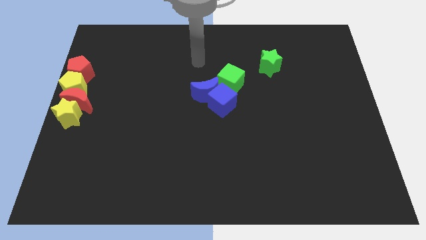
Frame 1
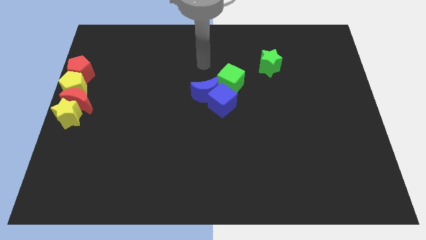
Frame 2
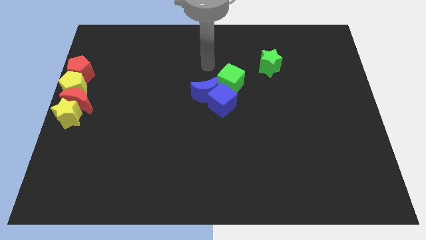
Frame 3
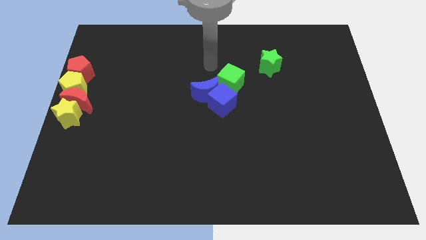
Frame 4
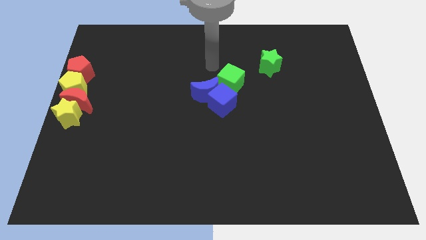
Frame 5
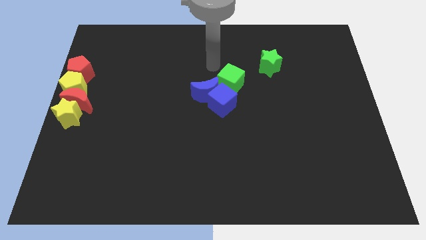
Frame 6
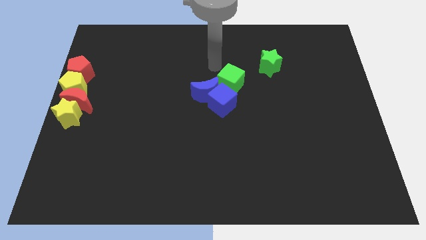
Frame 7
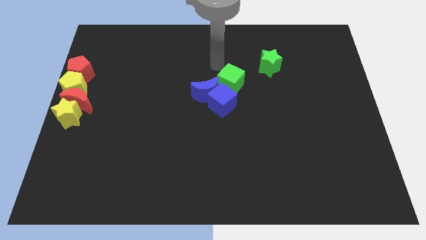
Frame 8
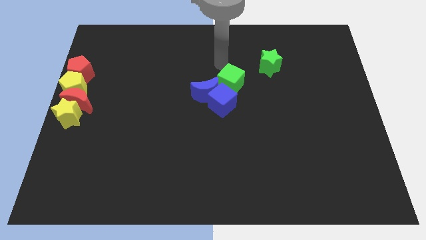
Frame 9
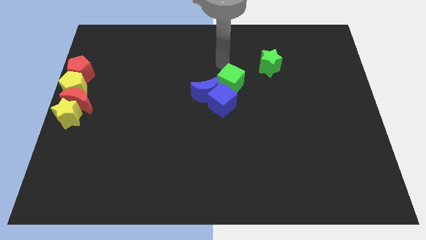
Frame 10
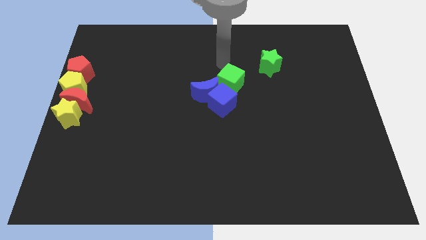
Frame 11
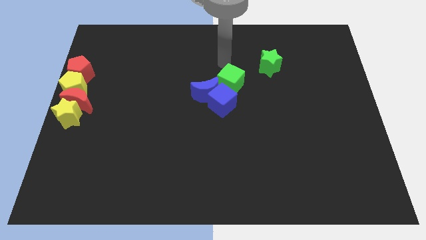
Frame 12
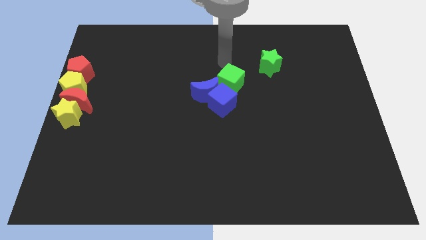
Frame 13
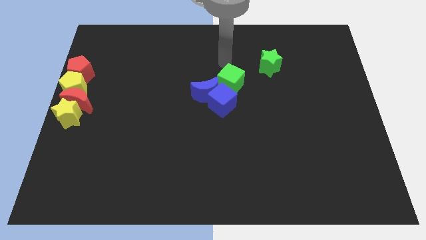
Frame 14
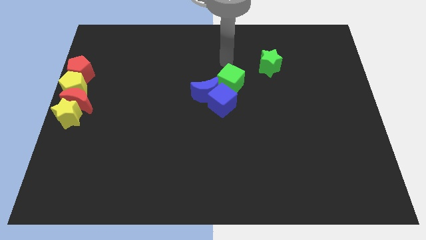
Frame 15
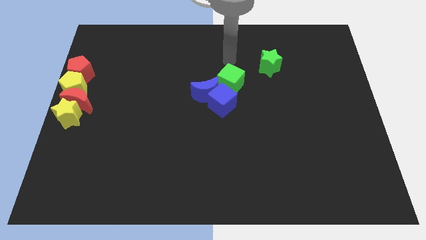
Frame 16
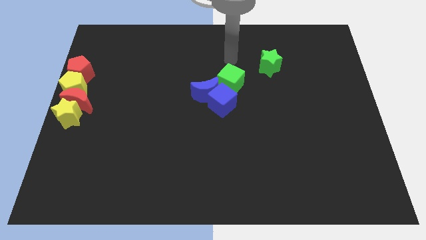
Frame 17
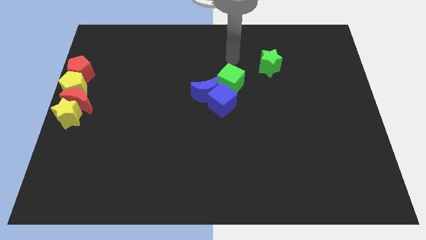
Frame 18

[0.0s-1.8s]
move your arm to the top of the green cube

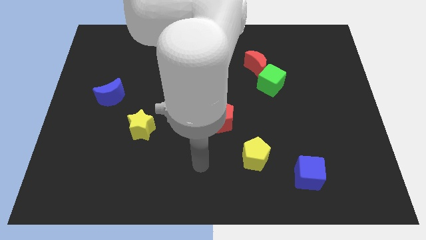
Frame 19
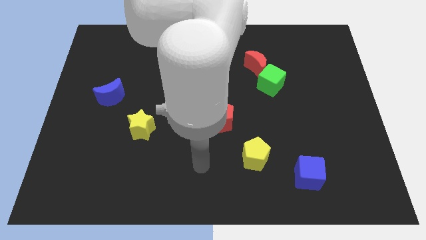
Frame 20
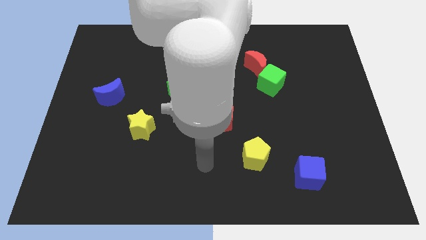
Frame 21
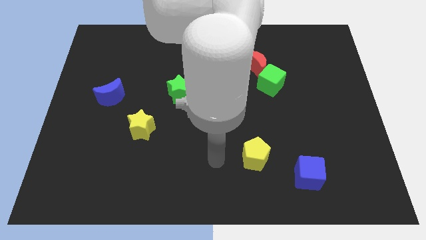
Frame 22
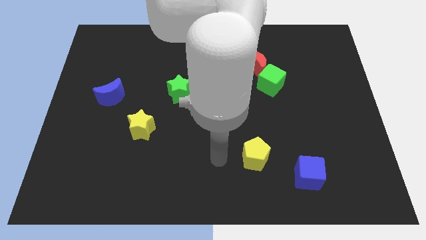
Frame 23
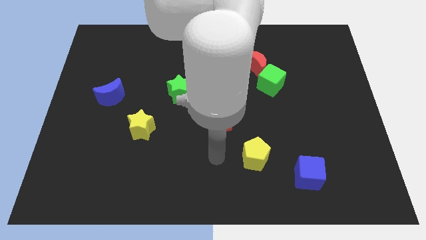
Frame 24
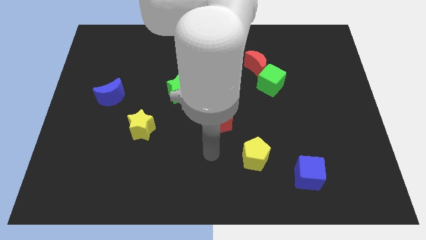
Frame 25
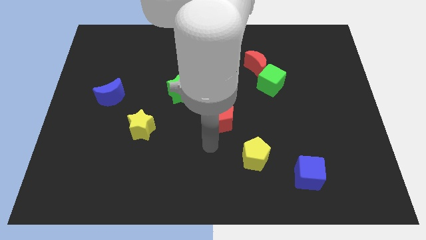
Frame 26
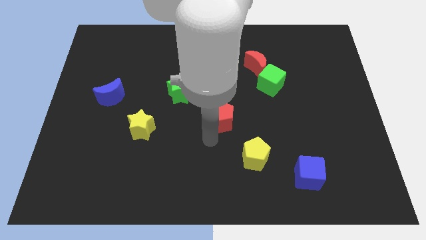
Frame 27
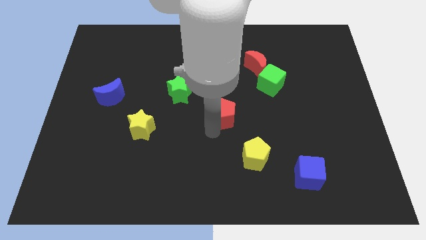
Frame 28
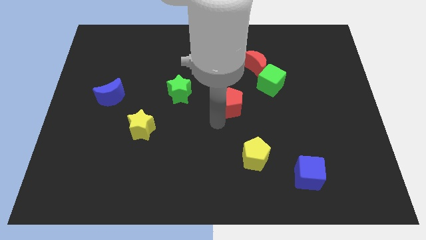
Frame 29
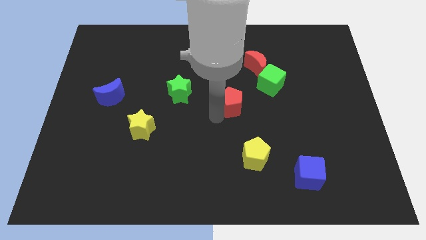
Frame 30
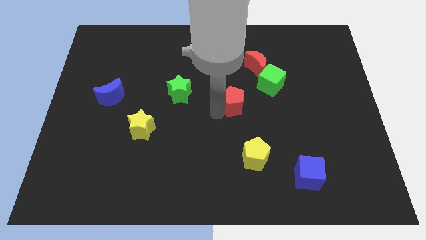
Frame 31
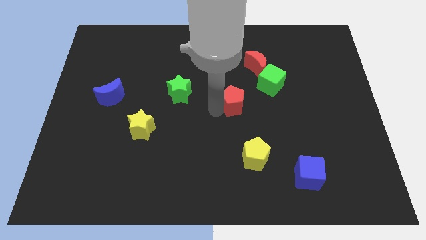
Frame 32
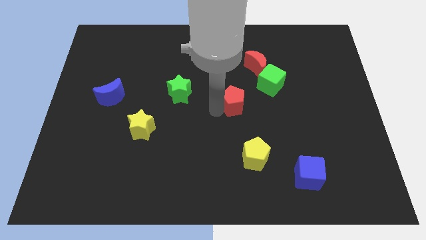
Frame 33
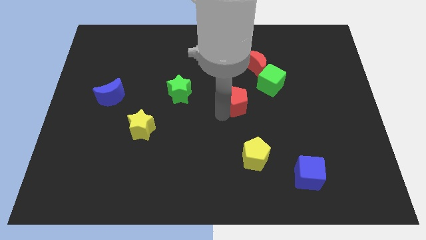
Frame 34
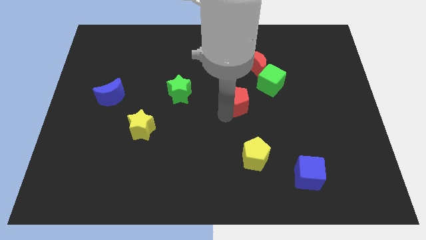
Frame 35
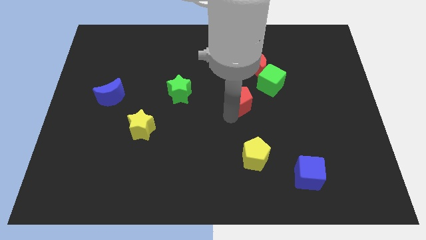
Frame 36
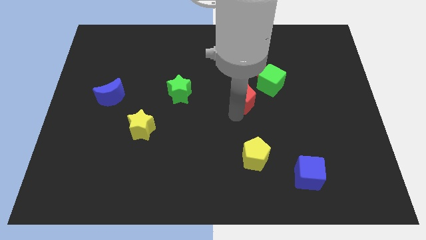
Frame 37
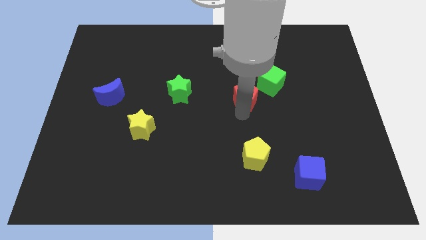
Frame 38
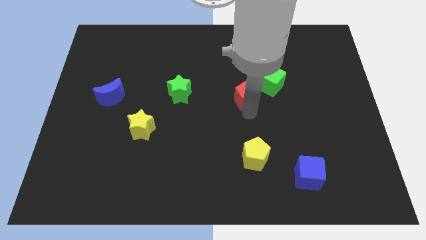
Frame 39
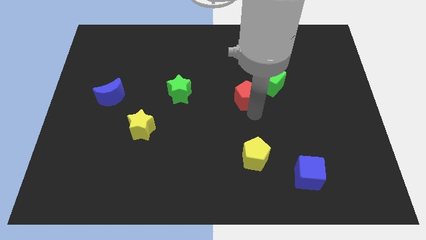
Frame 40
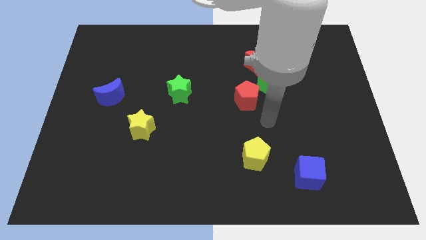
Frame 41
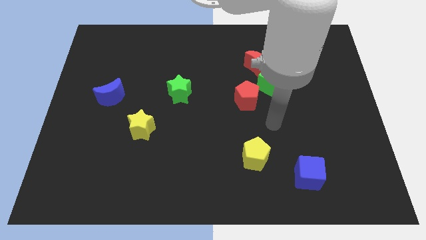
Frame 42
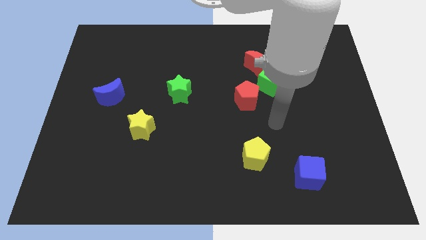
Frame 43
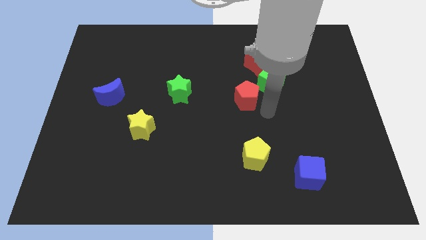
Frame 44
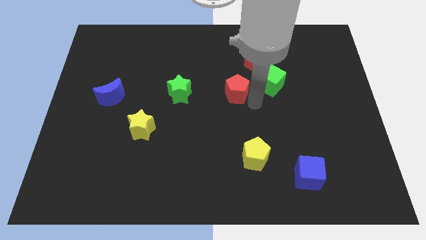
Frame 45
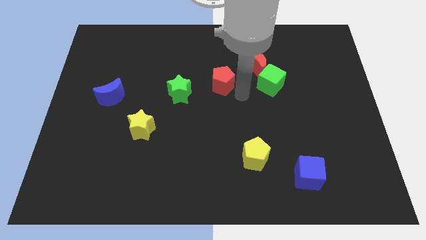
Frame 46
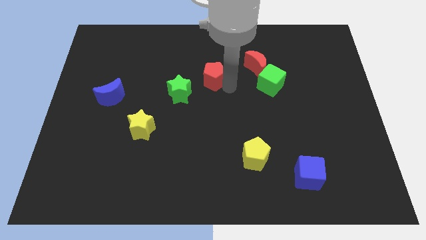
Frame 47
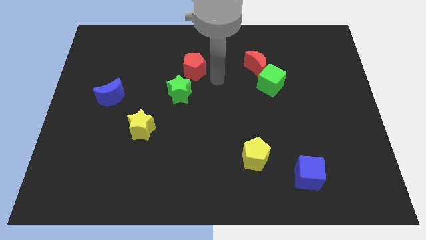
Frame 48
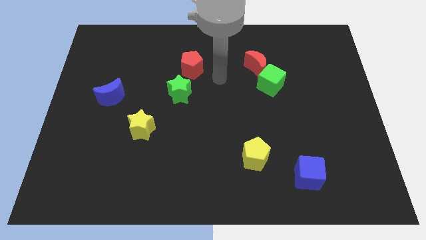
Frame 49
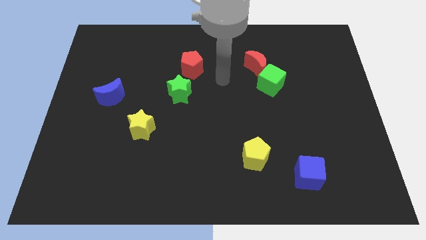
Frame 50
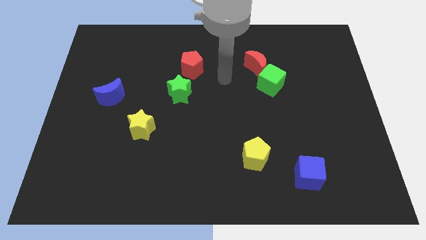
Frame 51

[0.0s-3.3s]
push the red pentagon towards green star

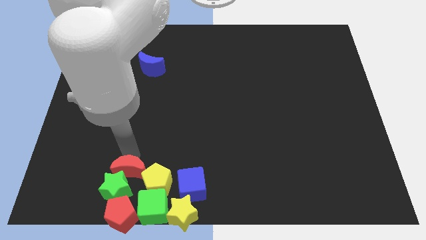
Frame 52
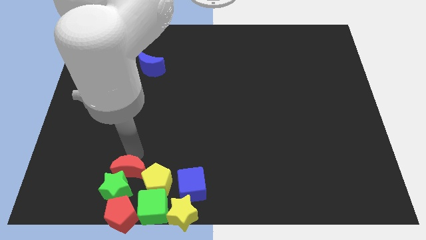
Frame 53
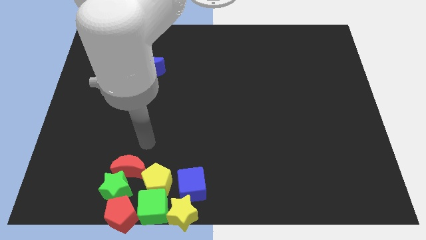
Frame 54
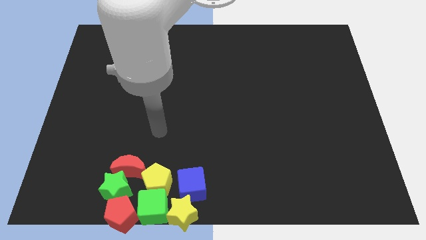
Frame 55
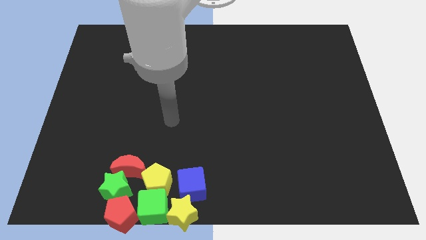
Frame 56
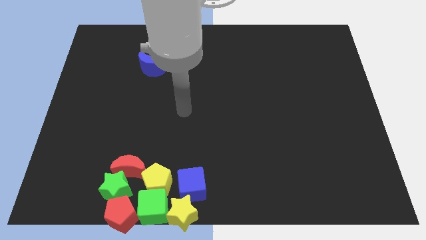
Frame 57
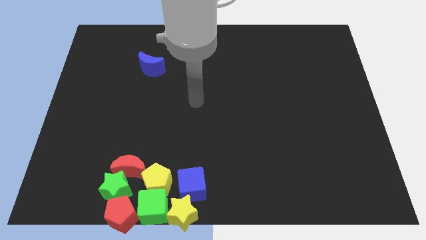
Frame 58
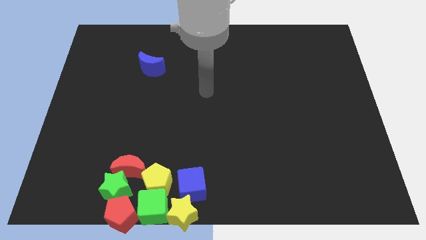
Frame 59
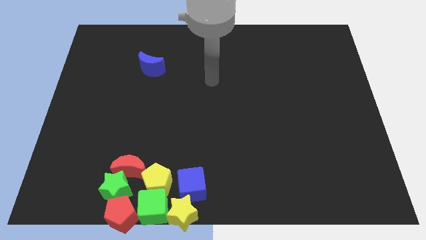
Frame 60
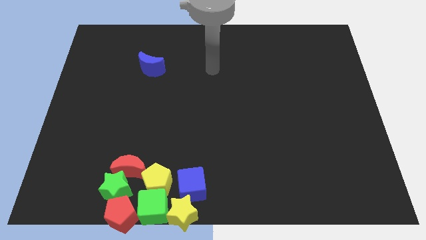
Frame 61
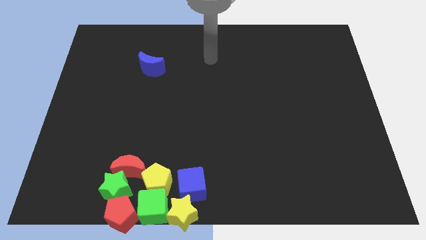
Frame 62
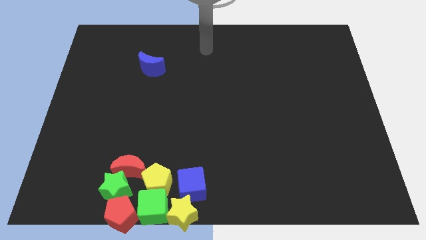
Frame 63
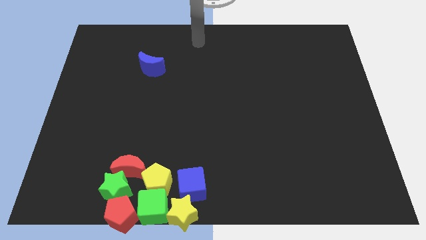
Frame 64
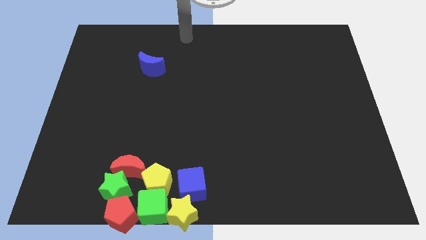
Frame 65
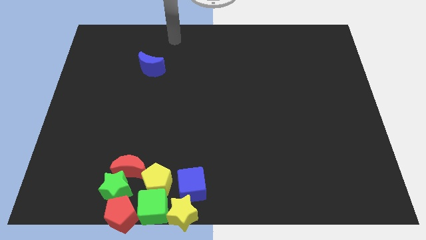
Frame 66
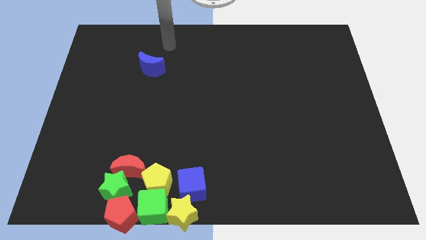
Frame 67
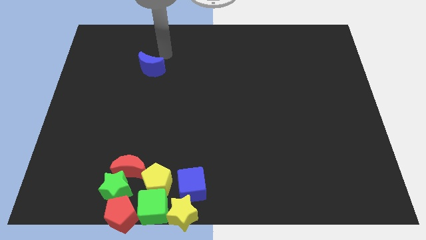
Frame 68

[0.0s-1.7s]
move your hand towards the blue crescent

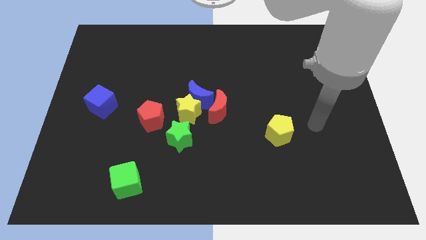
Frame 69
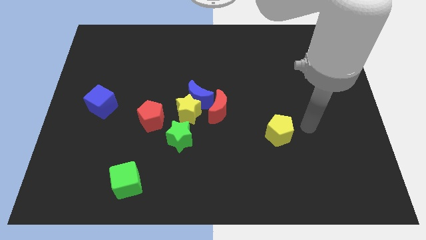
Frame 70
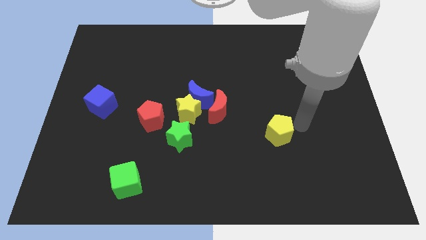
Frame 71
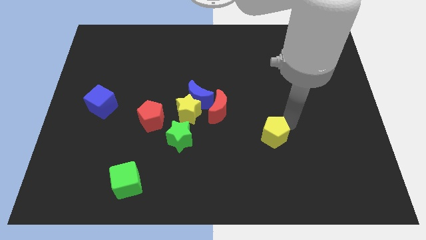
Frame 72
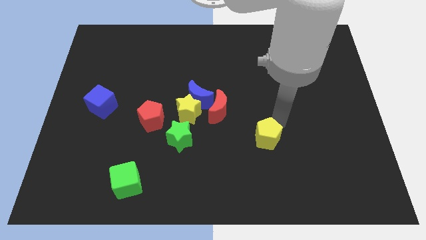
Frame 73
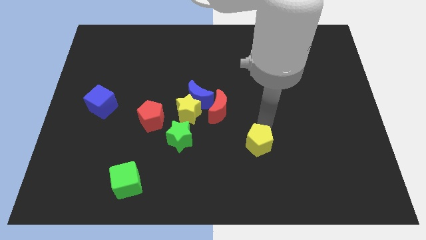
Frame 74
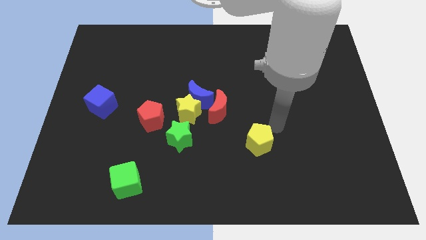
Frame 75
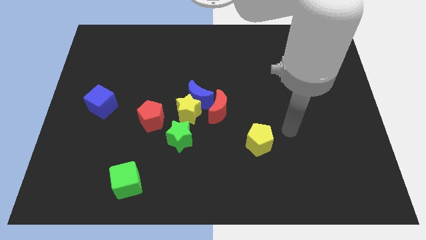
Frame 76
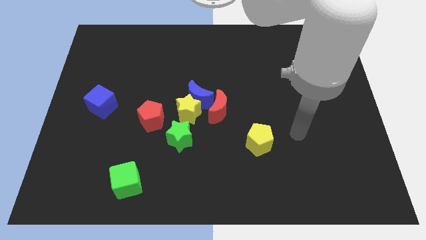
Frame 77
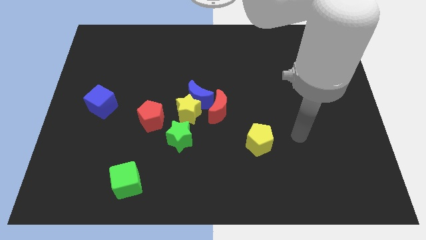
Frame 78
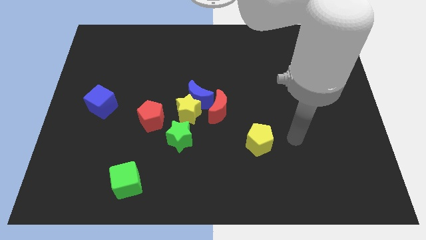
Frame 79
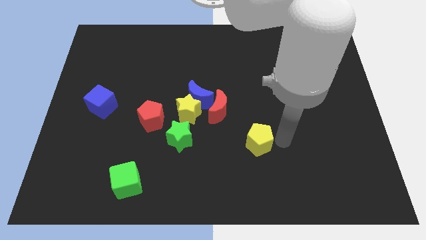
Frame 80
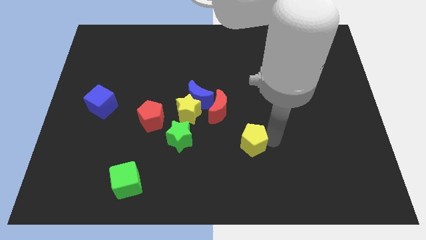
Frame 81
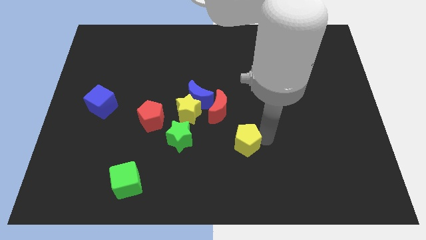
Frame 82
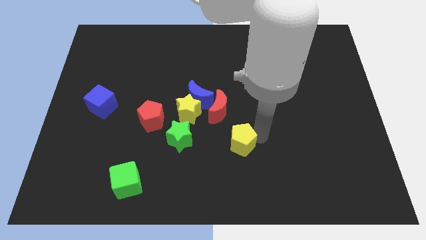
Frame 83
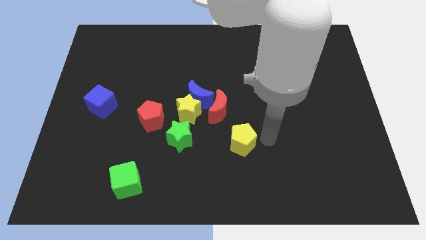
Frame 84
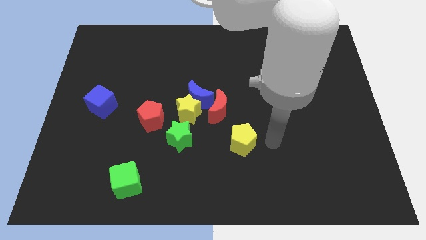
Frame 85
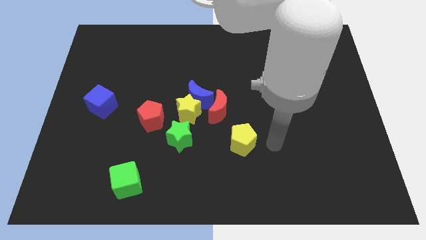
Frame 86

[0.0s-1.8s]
move the yellow pentagon diagonal right of the green star

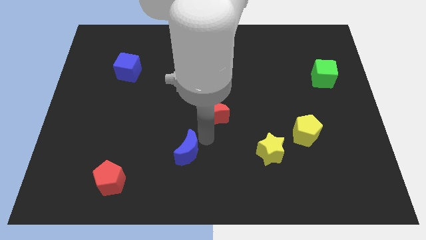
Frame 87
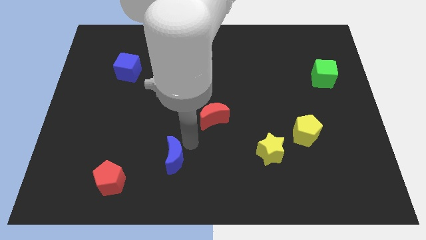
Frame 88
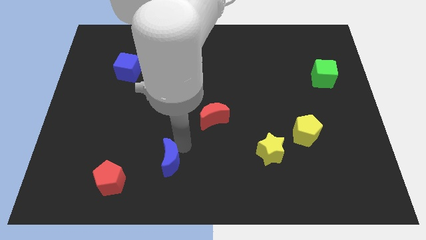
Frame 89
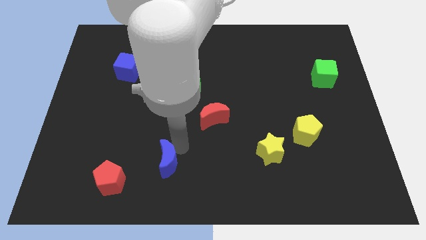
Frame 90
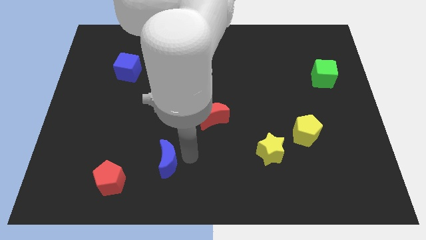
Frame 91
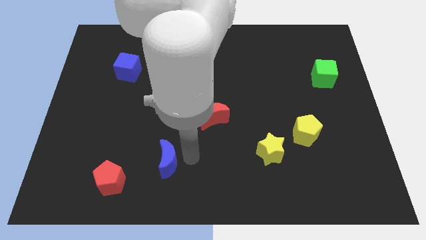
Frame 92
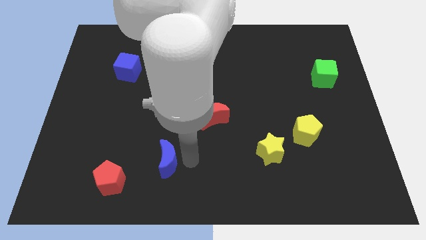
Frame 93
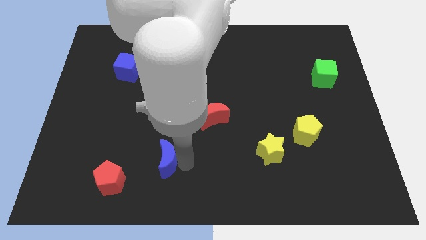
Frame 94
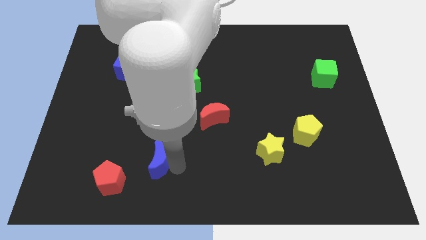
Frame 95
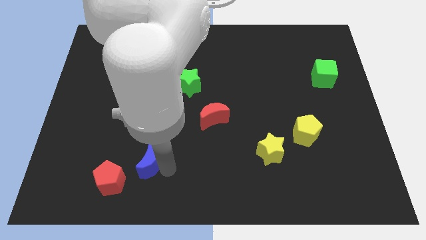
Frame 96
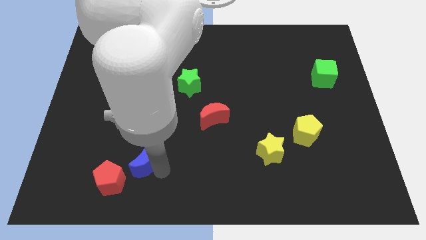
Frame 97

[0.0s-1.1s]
push the blue crescent slightly to the left
